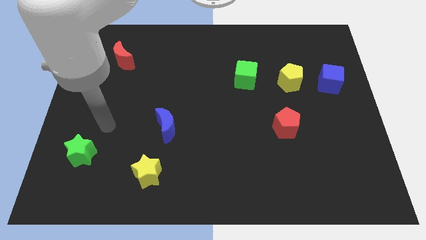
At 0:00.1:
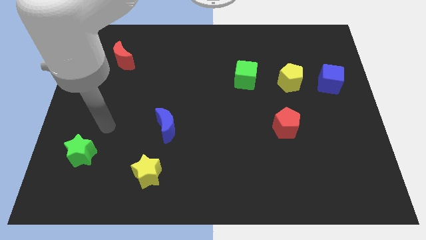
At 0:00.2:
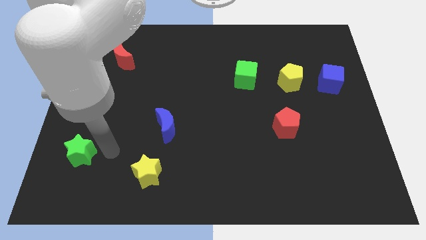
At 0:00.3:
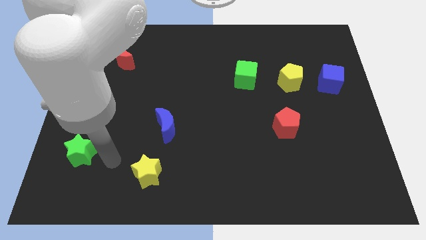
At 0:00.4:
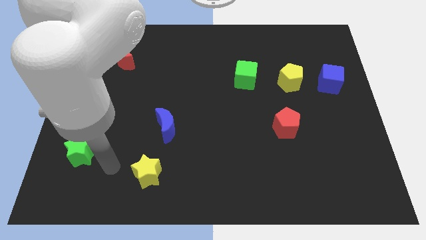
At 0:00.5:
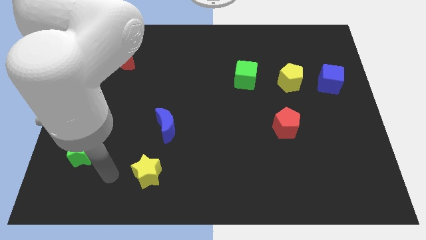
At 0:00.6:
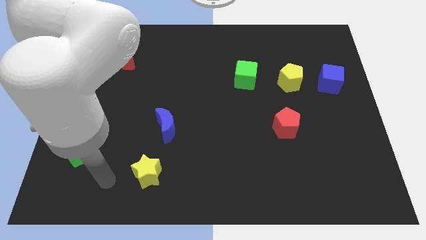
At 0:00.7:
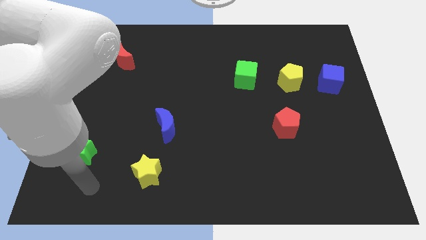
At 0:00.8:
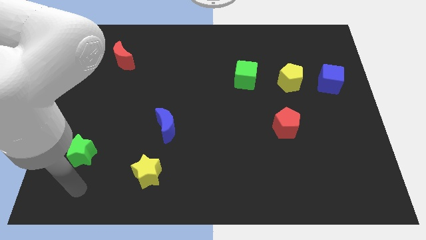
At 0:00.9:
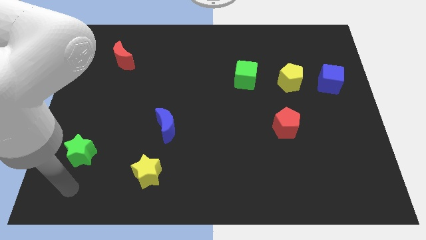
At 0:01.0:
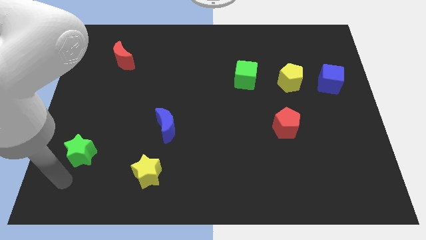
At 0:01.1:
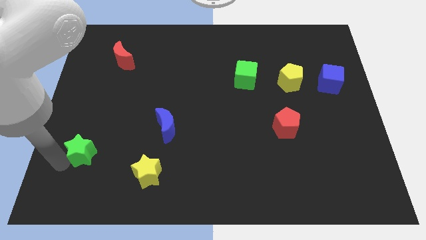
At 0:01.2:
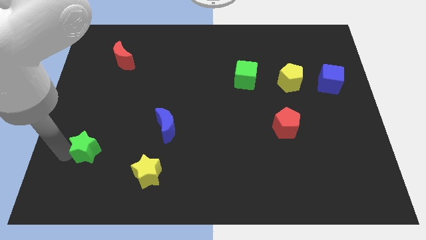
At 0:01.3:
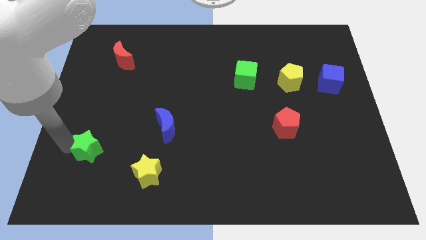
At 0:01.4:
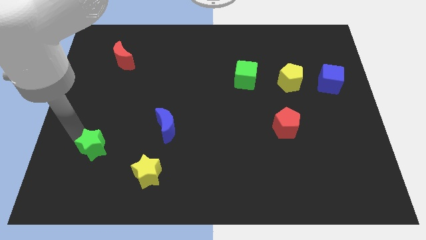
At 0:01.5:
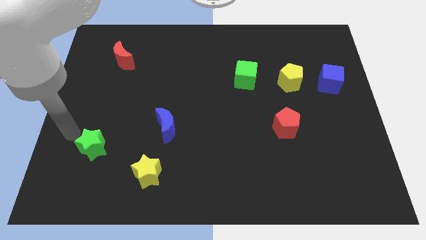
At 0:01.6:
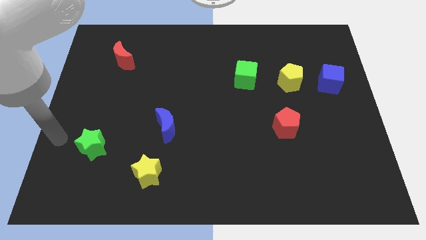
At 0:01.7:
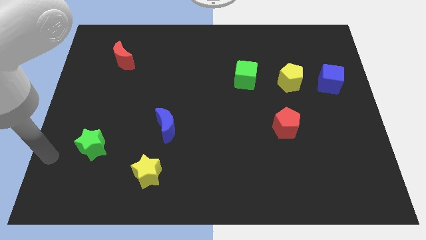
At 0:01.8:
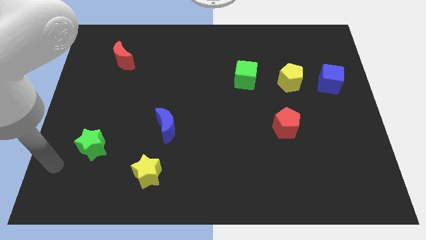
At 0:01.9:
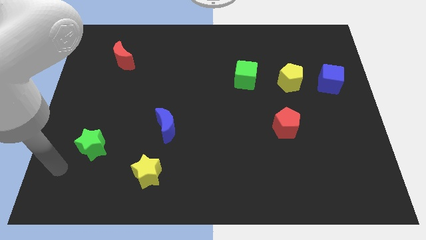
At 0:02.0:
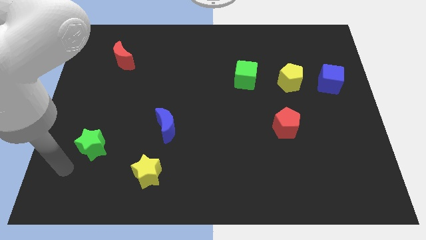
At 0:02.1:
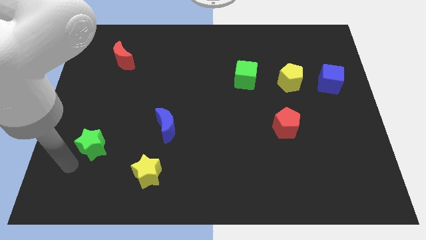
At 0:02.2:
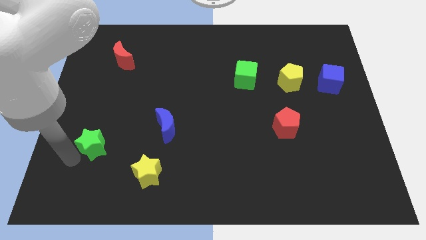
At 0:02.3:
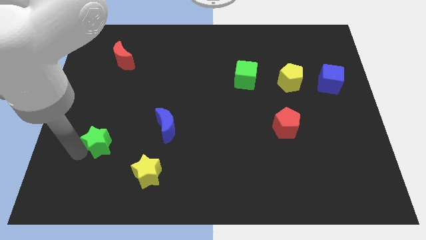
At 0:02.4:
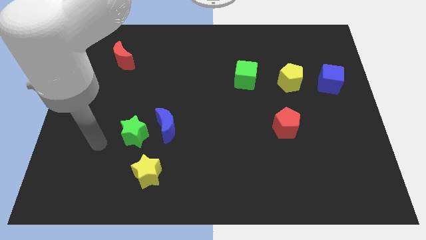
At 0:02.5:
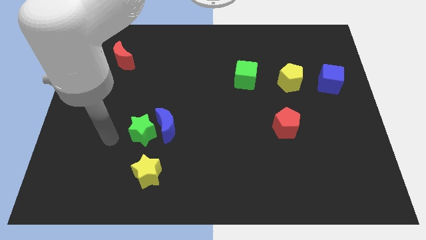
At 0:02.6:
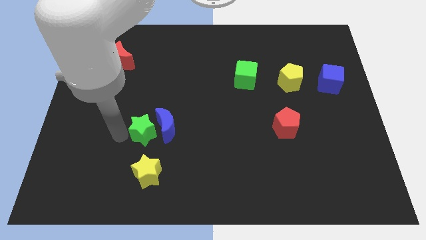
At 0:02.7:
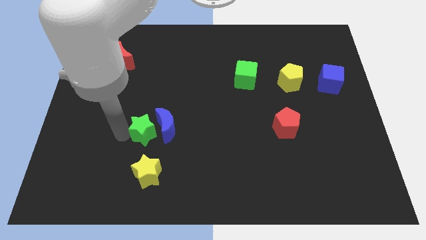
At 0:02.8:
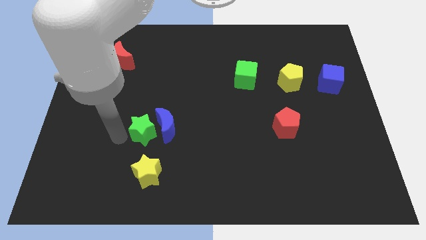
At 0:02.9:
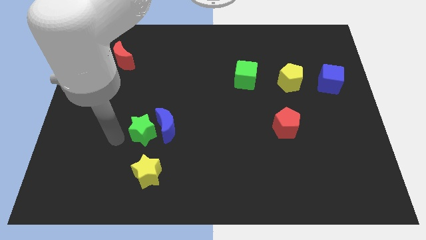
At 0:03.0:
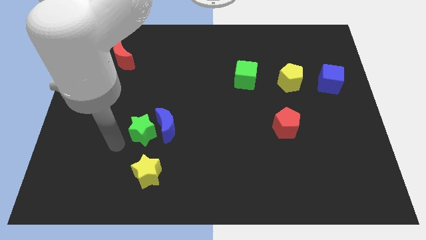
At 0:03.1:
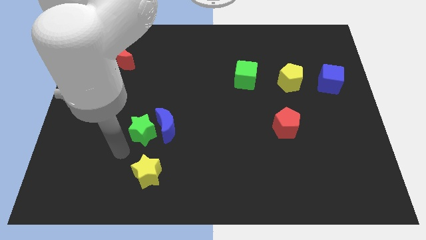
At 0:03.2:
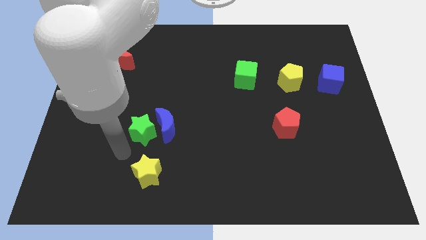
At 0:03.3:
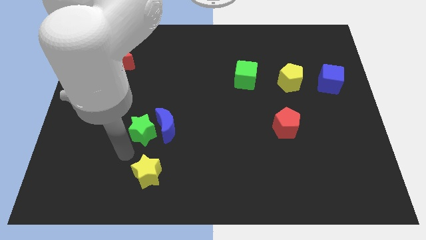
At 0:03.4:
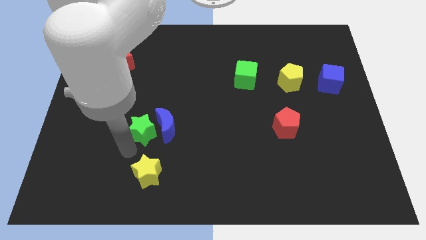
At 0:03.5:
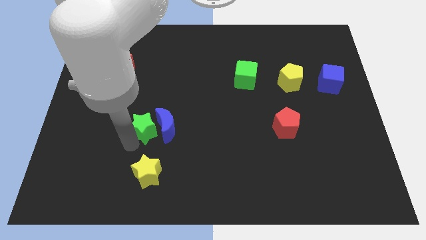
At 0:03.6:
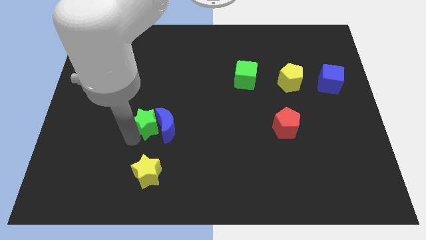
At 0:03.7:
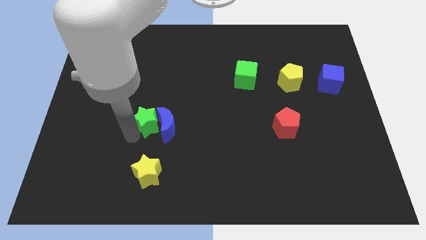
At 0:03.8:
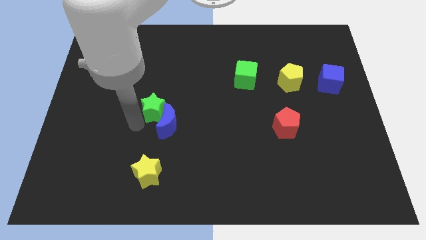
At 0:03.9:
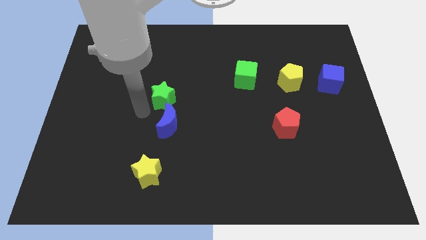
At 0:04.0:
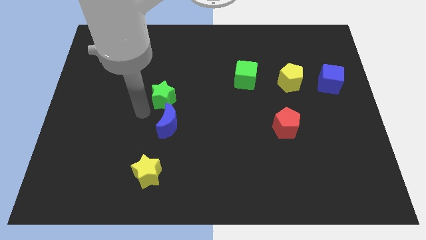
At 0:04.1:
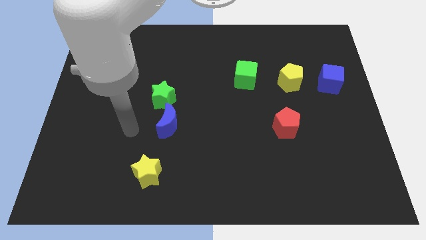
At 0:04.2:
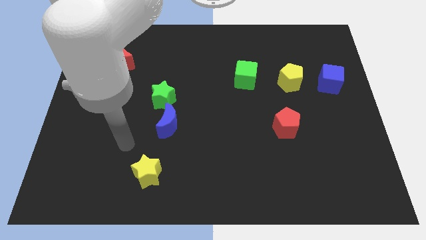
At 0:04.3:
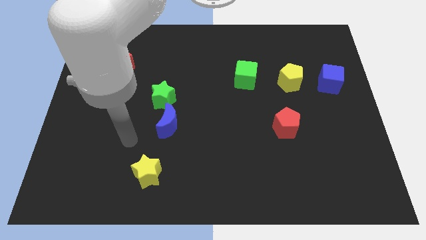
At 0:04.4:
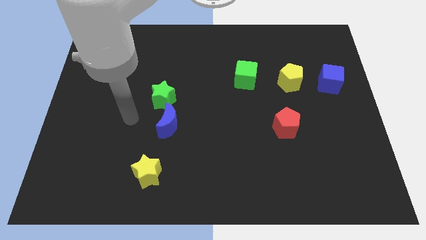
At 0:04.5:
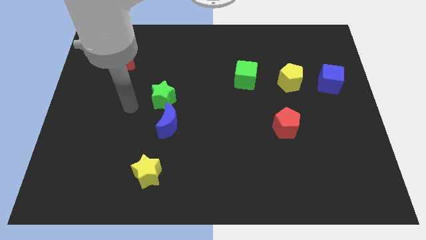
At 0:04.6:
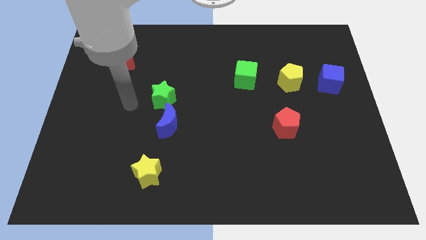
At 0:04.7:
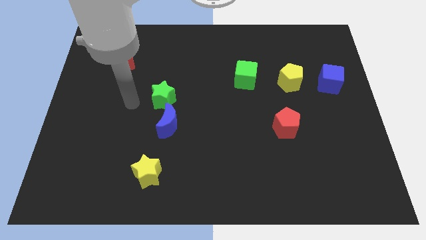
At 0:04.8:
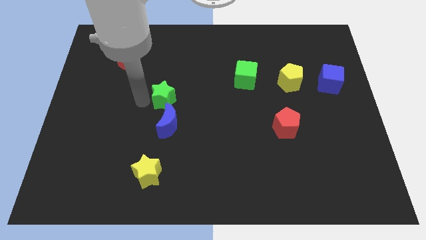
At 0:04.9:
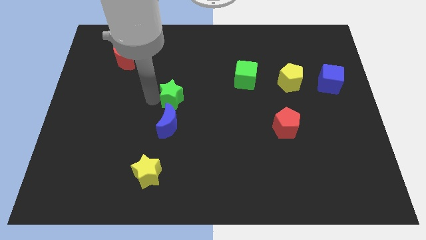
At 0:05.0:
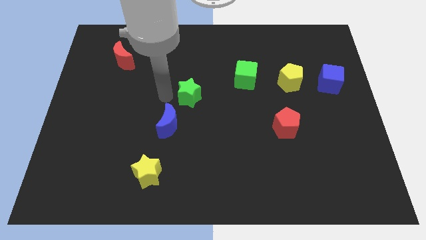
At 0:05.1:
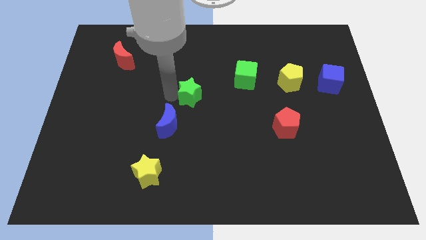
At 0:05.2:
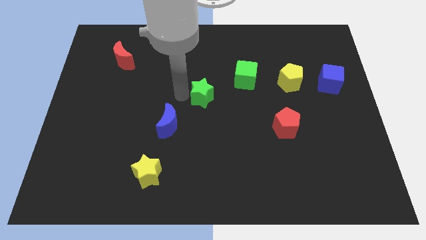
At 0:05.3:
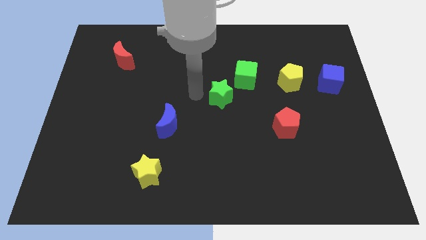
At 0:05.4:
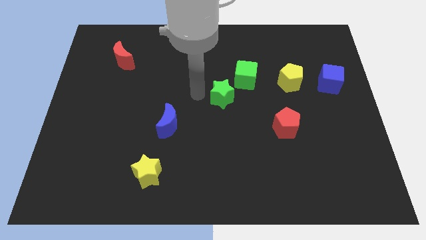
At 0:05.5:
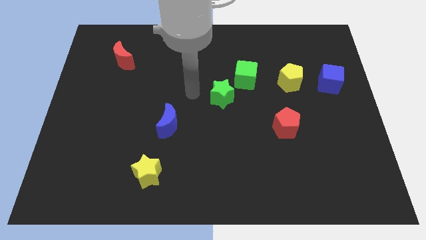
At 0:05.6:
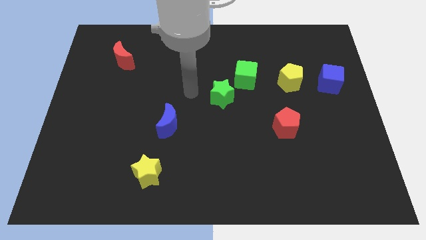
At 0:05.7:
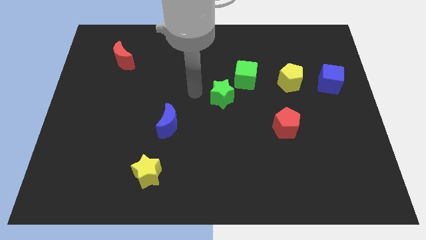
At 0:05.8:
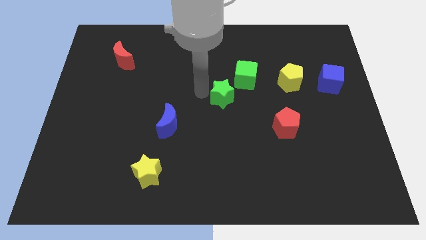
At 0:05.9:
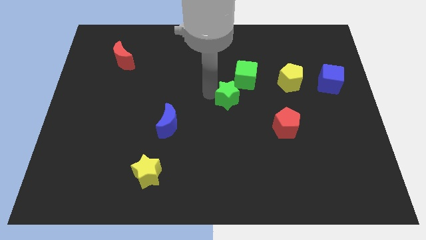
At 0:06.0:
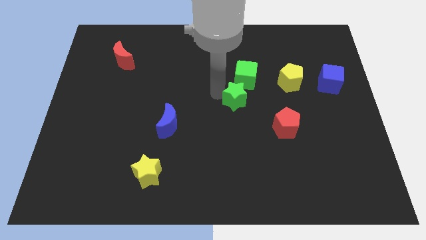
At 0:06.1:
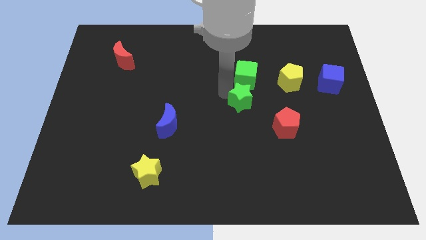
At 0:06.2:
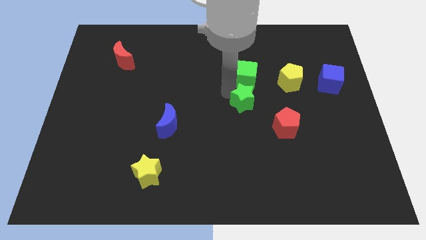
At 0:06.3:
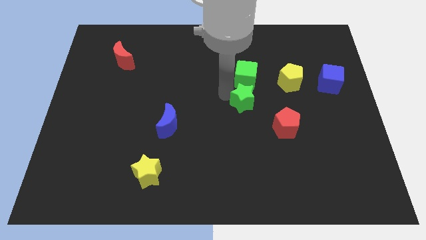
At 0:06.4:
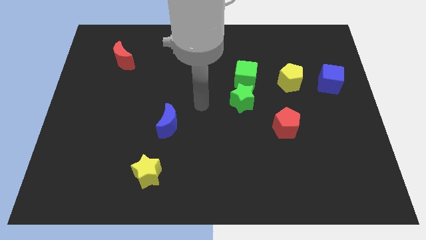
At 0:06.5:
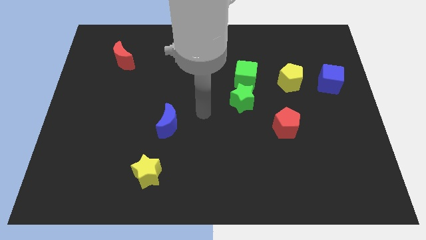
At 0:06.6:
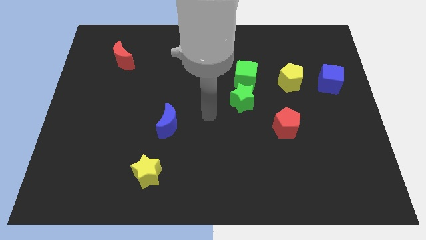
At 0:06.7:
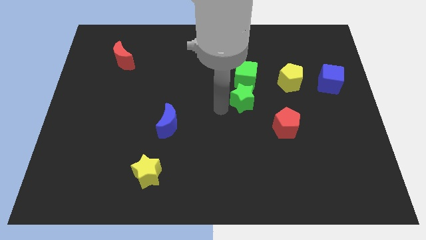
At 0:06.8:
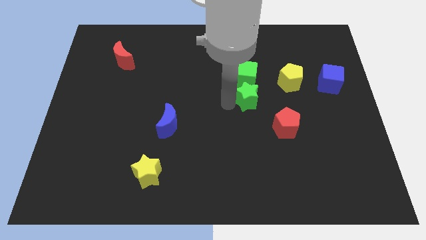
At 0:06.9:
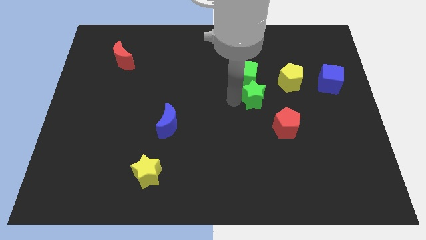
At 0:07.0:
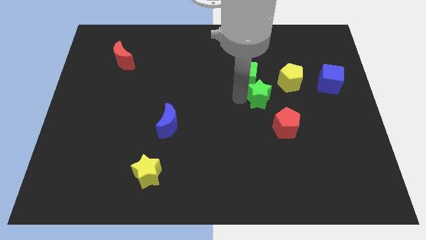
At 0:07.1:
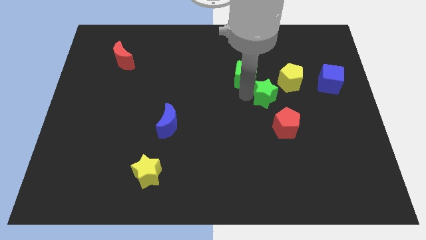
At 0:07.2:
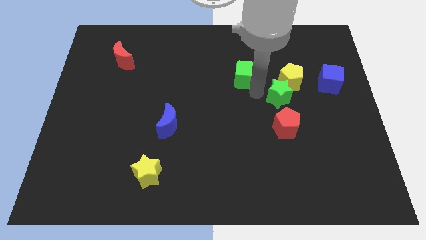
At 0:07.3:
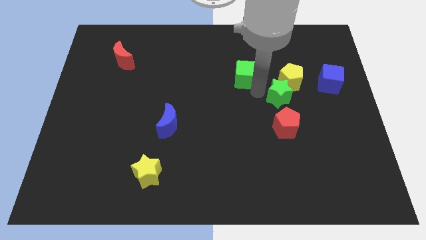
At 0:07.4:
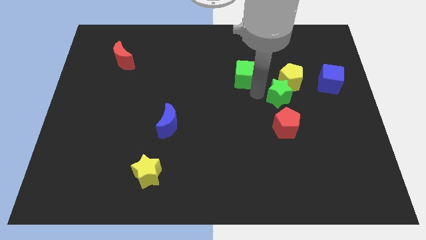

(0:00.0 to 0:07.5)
slide the green star towards the yellow pentagon

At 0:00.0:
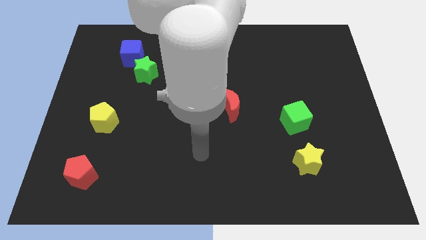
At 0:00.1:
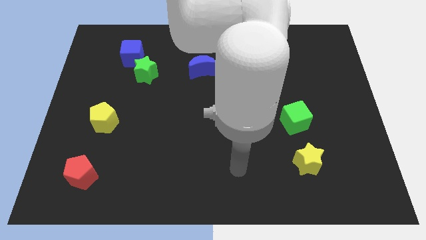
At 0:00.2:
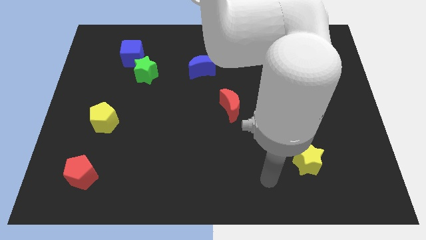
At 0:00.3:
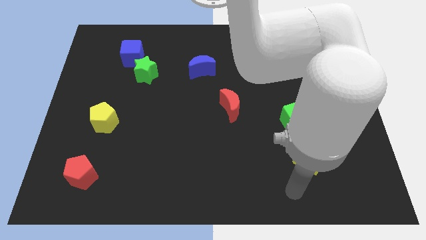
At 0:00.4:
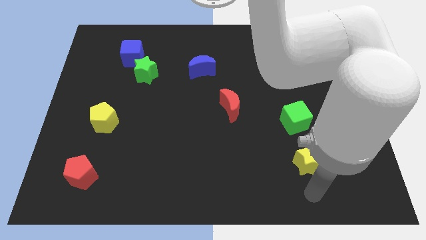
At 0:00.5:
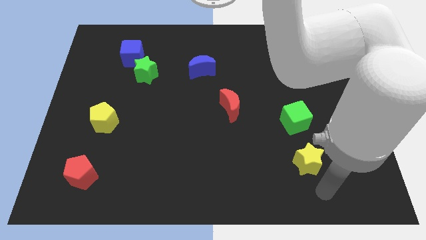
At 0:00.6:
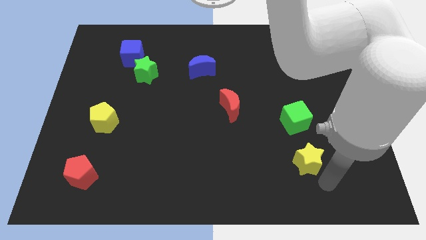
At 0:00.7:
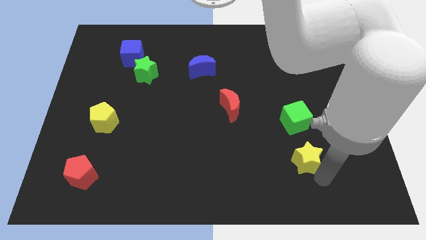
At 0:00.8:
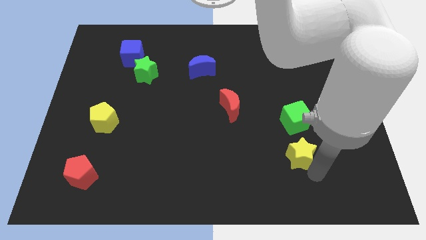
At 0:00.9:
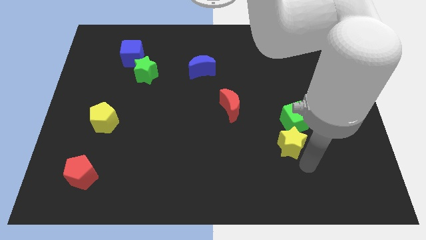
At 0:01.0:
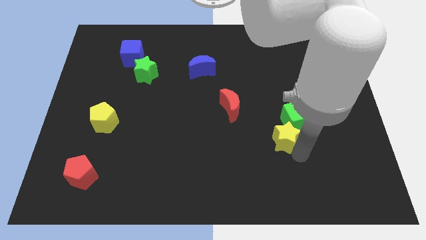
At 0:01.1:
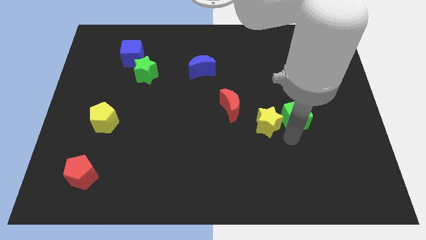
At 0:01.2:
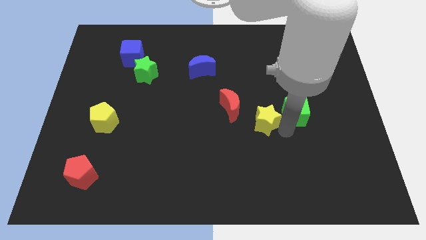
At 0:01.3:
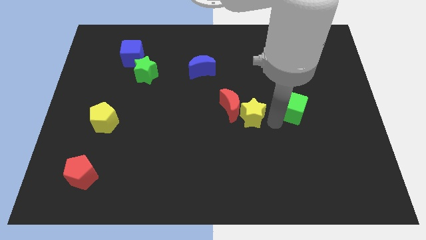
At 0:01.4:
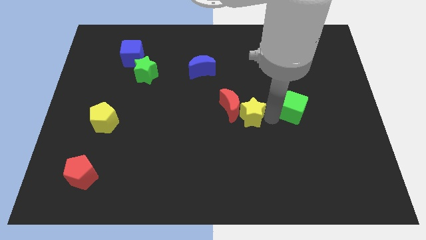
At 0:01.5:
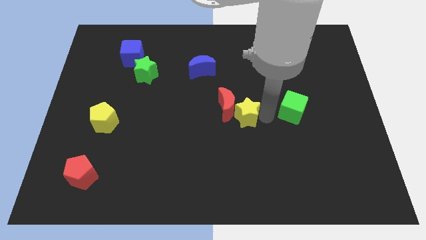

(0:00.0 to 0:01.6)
move the yellow star next to the red moon
